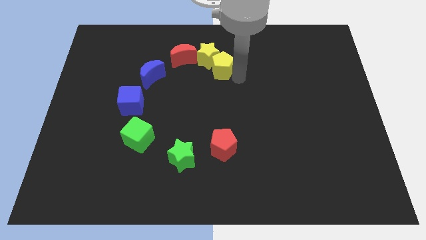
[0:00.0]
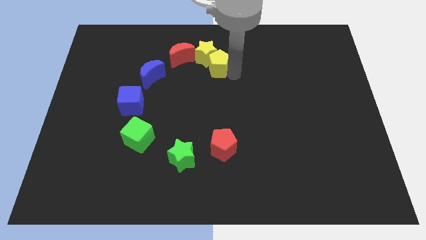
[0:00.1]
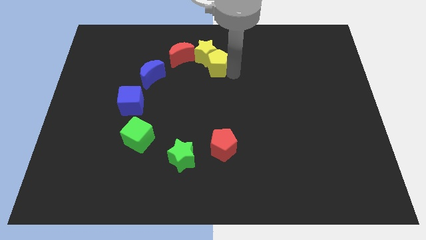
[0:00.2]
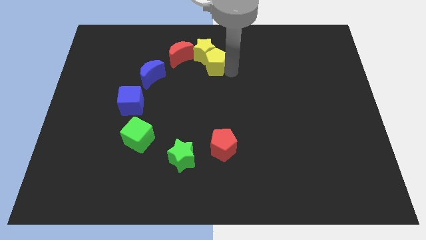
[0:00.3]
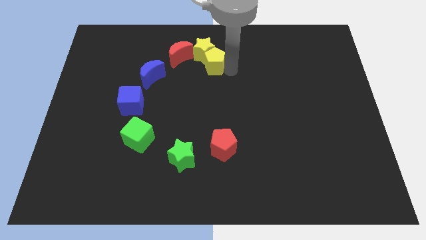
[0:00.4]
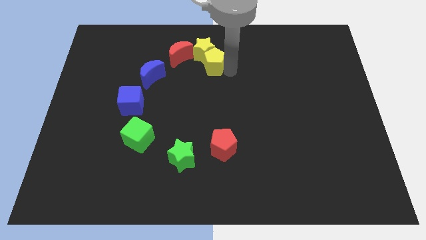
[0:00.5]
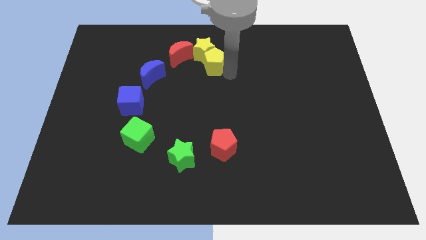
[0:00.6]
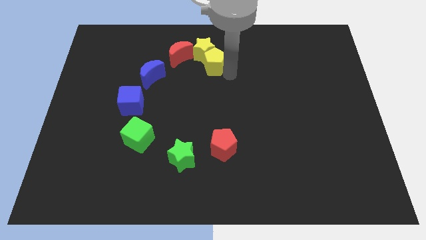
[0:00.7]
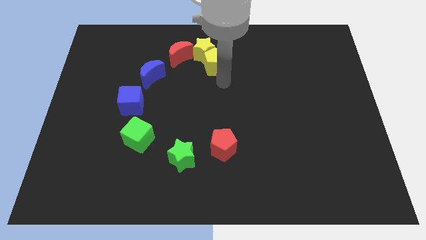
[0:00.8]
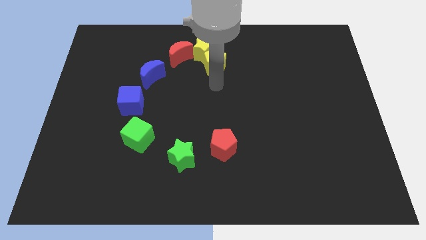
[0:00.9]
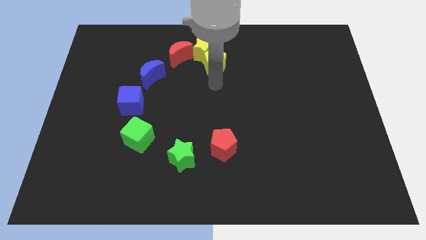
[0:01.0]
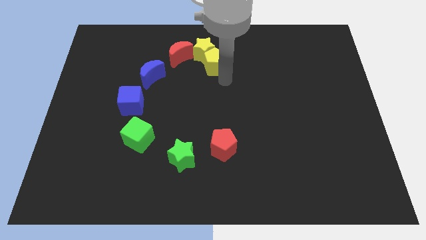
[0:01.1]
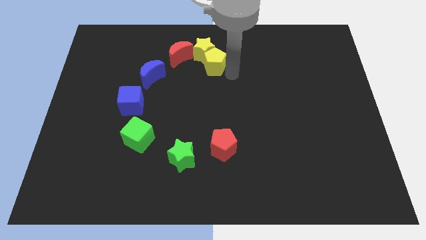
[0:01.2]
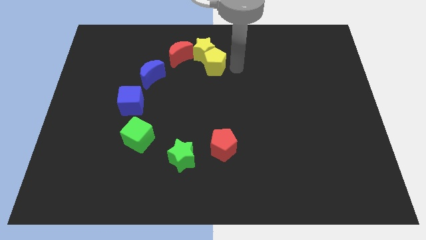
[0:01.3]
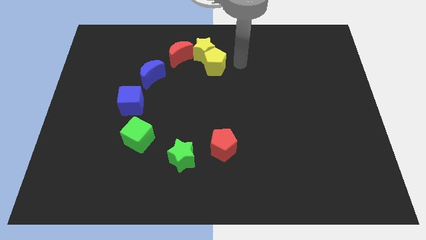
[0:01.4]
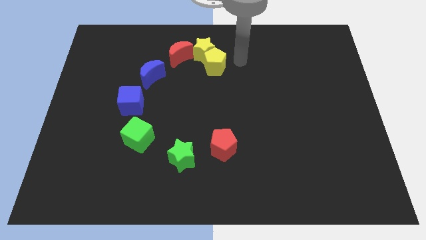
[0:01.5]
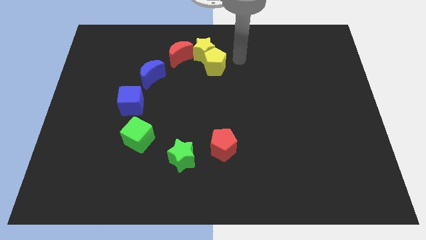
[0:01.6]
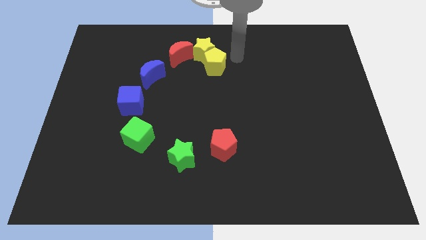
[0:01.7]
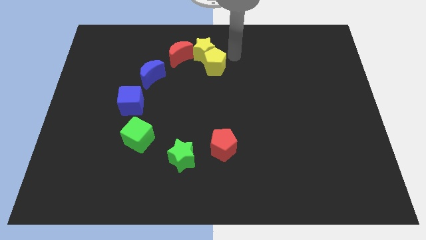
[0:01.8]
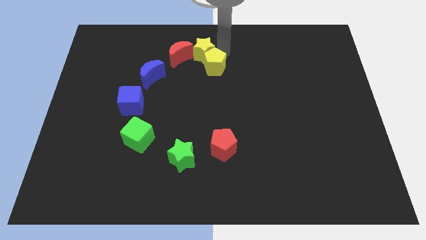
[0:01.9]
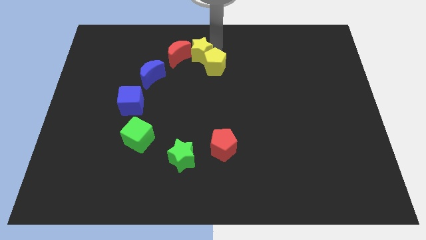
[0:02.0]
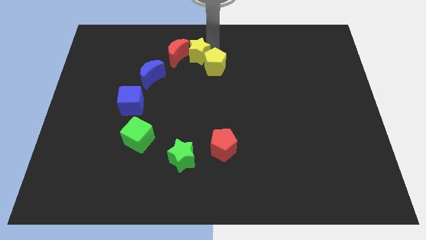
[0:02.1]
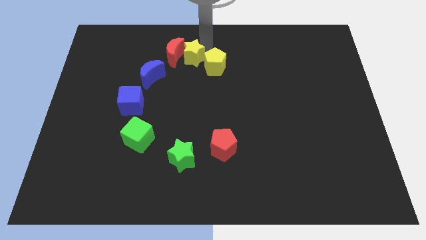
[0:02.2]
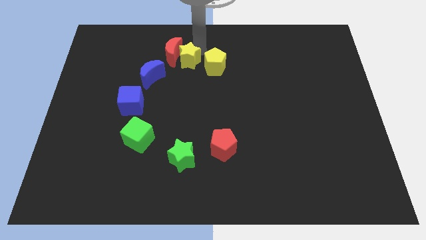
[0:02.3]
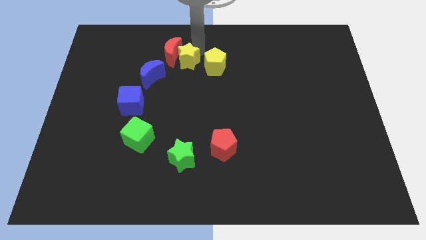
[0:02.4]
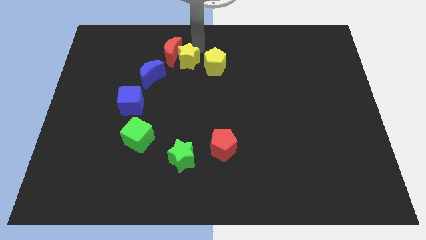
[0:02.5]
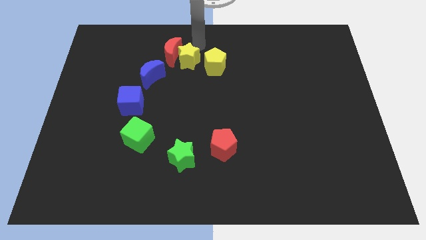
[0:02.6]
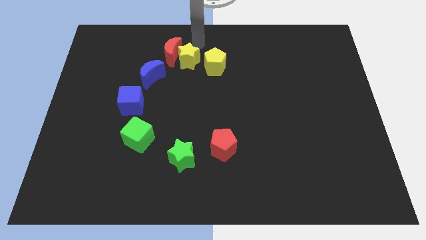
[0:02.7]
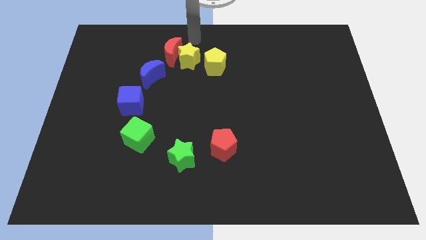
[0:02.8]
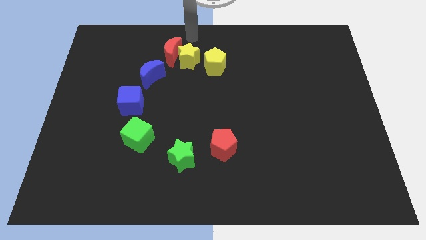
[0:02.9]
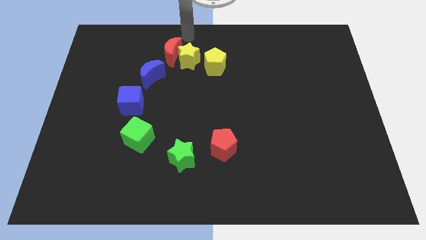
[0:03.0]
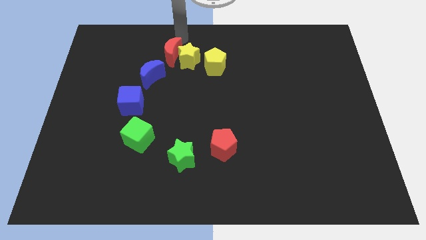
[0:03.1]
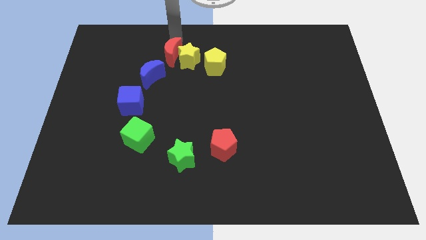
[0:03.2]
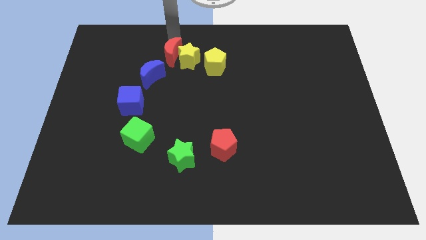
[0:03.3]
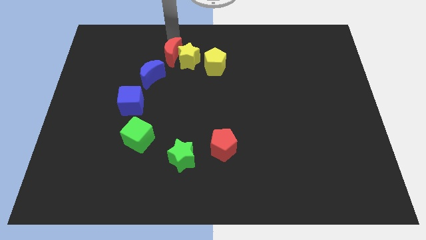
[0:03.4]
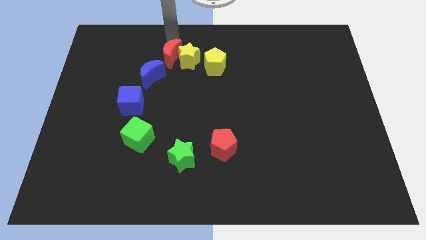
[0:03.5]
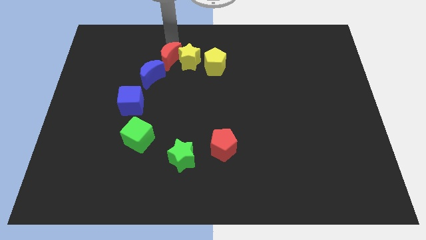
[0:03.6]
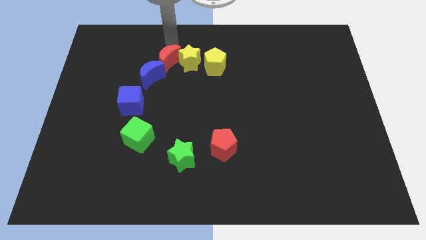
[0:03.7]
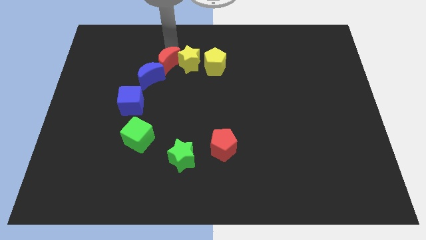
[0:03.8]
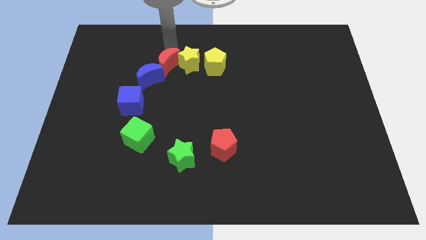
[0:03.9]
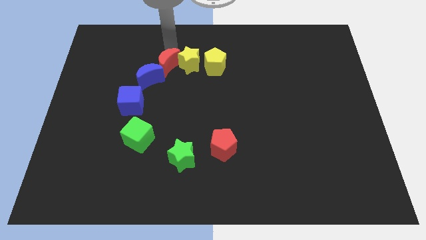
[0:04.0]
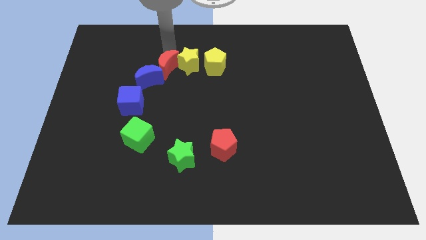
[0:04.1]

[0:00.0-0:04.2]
adjust yellow blocks and red moon to form a line

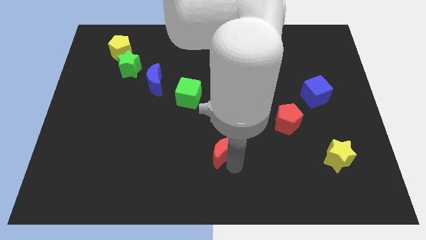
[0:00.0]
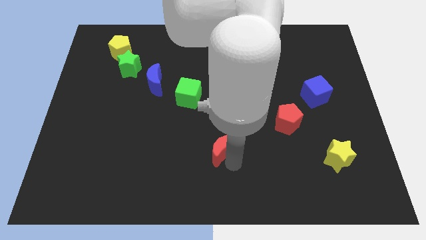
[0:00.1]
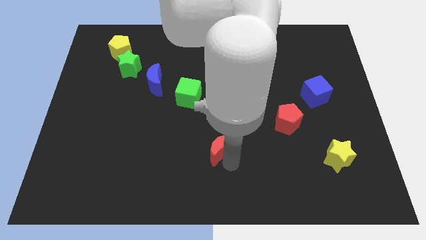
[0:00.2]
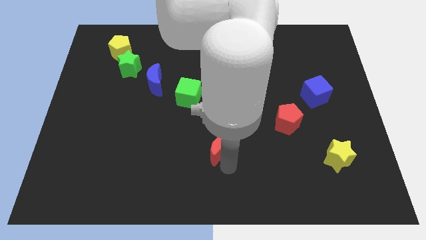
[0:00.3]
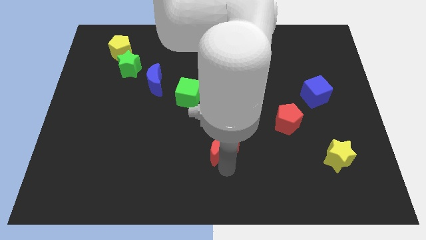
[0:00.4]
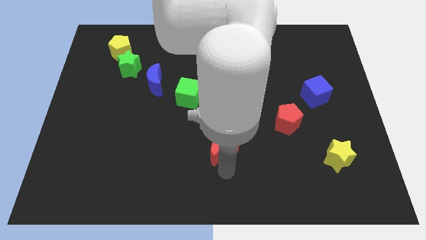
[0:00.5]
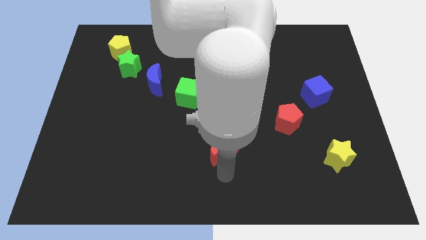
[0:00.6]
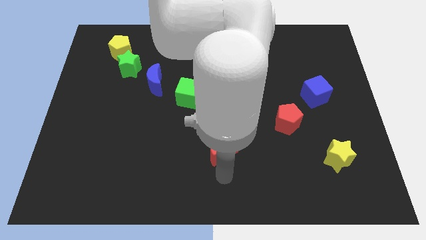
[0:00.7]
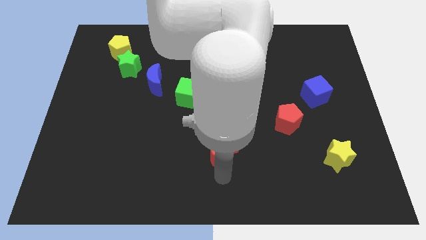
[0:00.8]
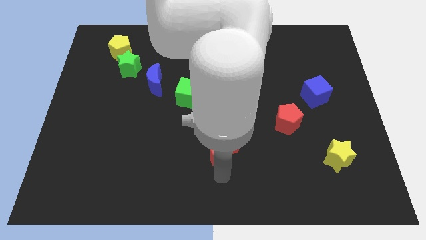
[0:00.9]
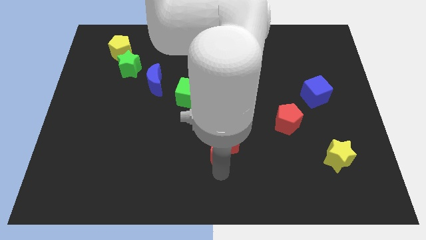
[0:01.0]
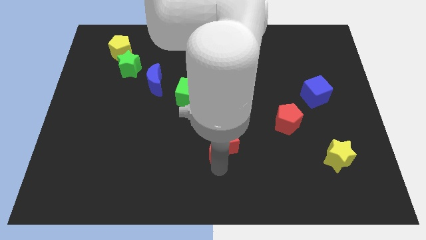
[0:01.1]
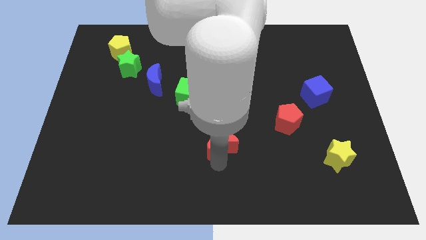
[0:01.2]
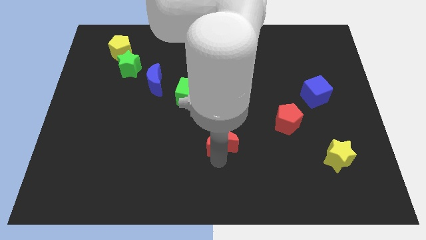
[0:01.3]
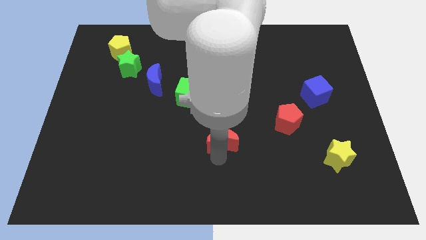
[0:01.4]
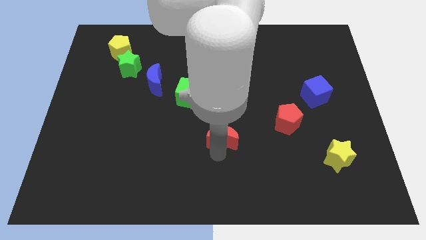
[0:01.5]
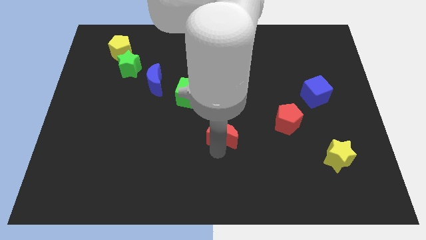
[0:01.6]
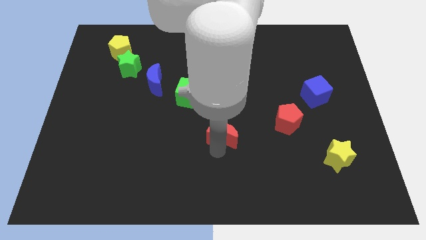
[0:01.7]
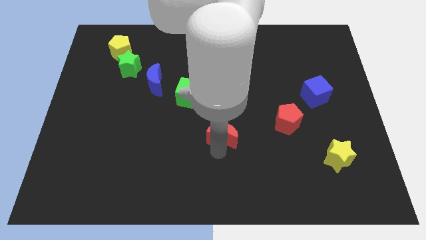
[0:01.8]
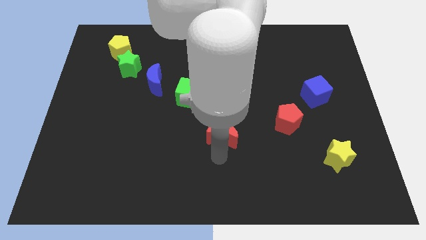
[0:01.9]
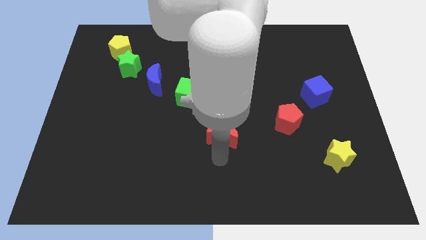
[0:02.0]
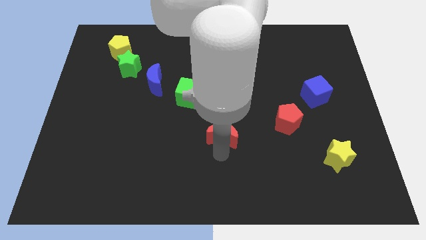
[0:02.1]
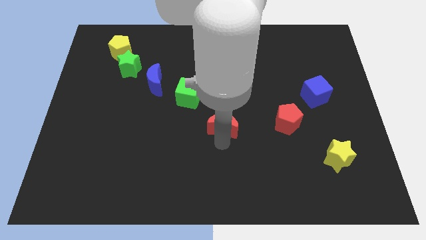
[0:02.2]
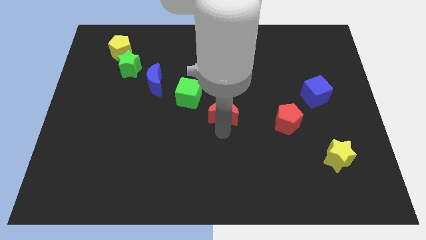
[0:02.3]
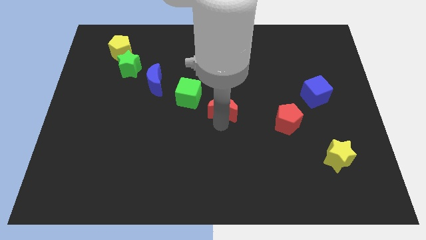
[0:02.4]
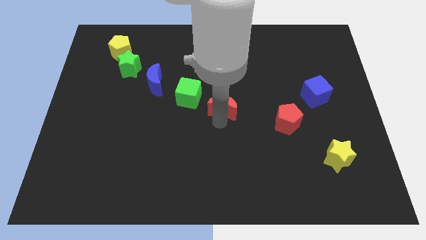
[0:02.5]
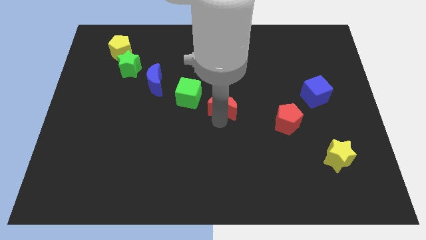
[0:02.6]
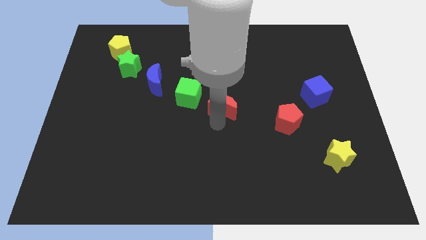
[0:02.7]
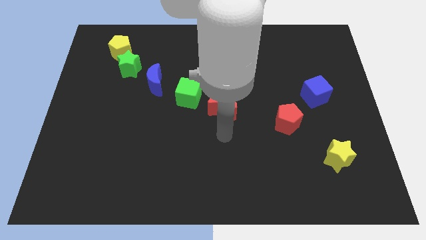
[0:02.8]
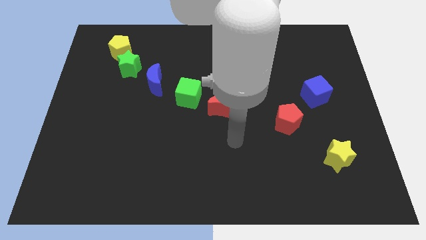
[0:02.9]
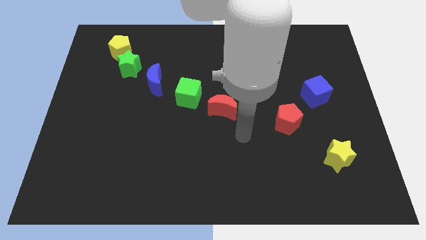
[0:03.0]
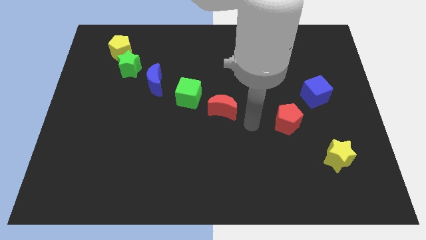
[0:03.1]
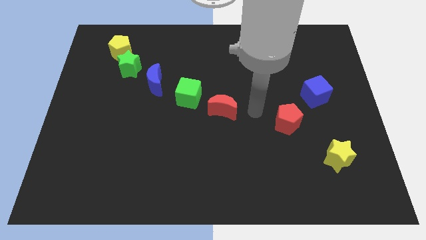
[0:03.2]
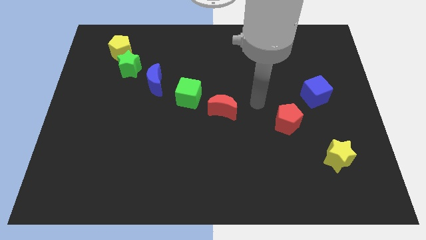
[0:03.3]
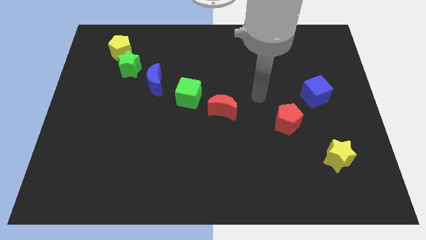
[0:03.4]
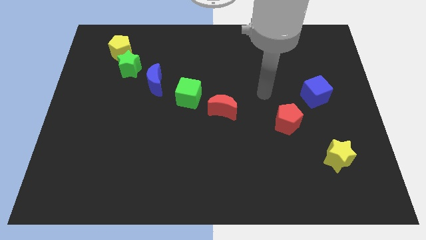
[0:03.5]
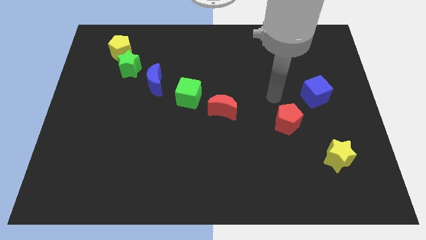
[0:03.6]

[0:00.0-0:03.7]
place the red crescent at the center of the board

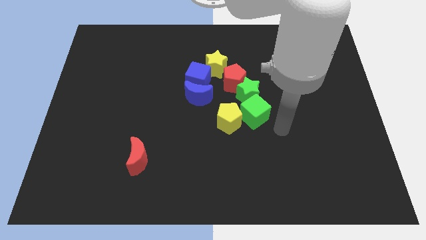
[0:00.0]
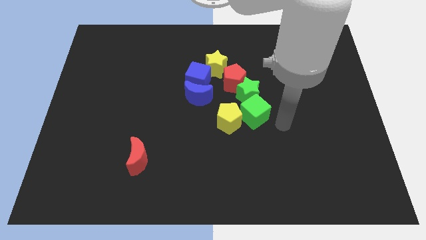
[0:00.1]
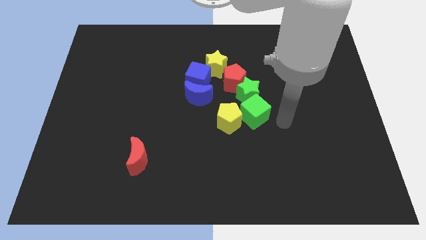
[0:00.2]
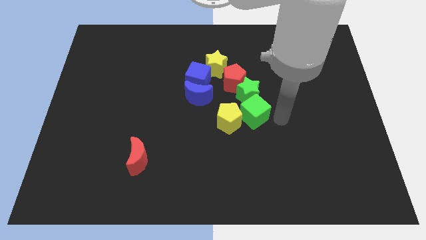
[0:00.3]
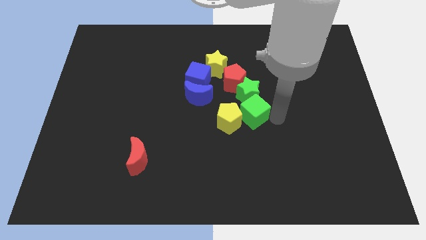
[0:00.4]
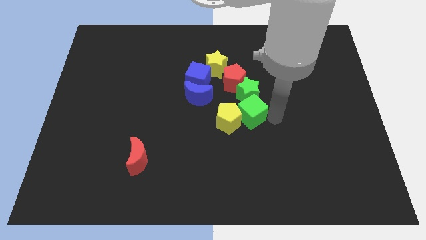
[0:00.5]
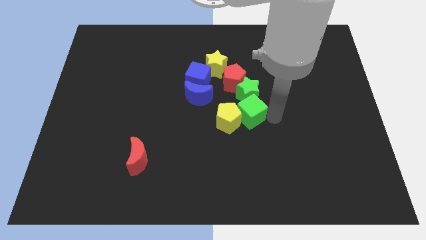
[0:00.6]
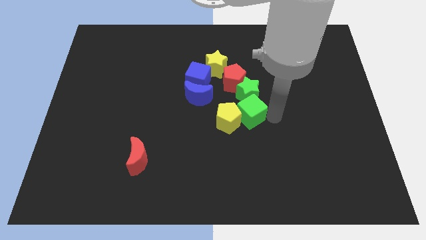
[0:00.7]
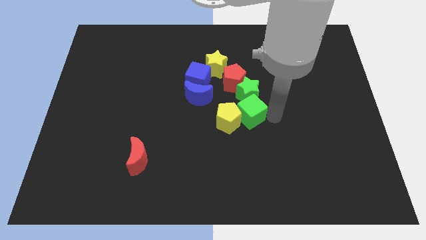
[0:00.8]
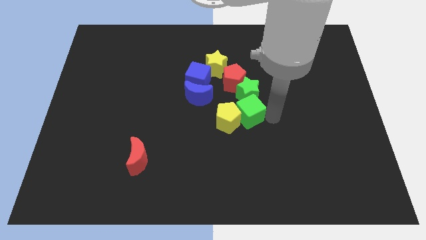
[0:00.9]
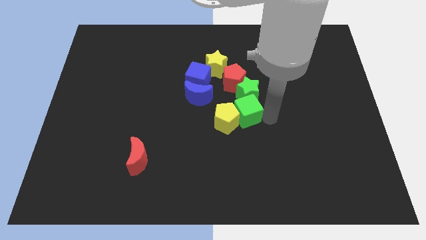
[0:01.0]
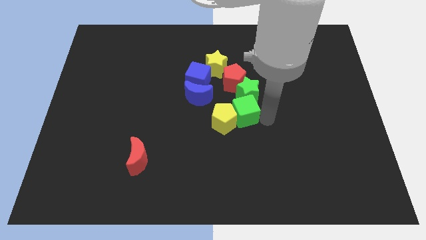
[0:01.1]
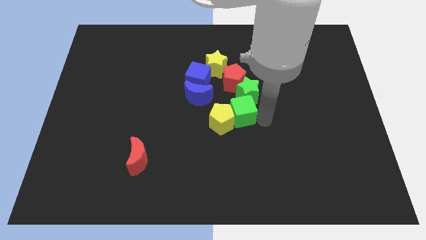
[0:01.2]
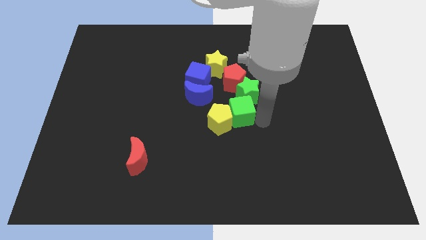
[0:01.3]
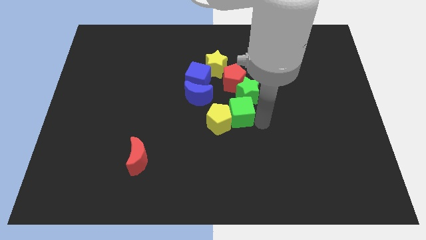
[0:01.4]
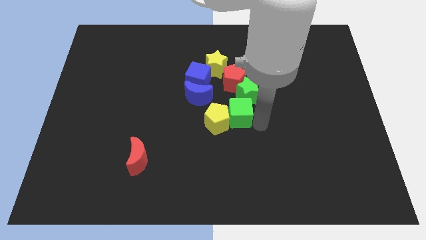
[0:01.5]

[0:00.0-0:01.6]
move the green cube and yellow pentagon slightly to the left side
